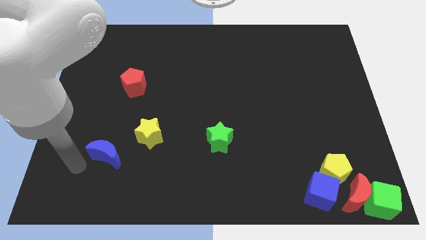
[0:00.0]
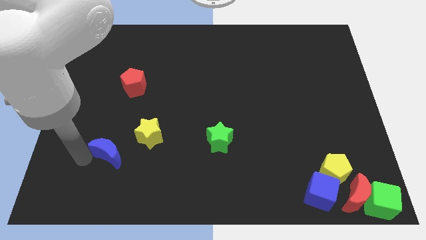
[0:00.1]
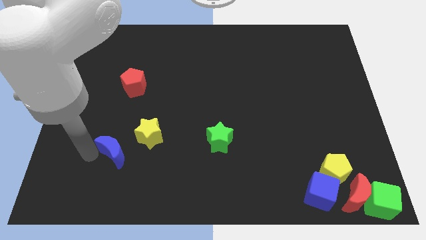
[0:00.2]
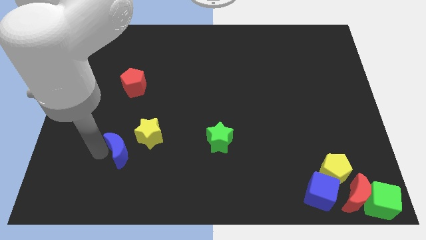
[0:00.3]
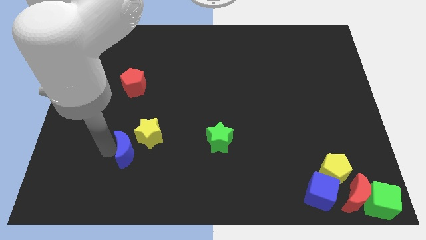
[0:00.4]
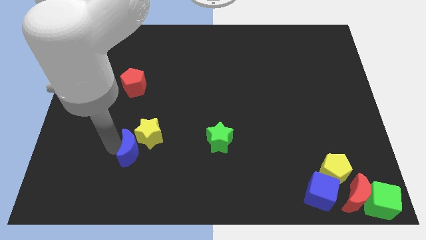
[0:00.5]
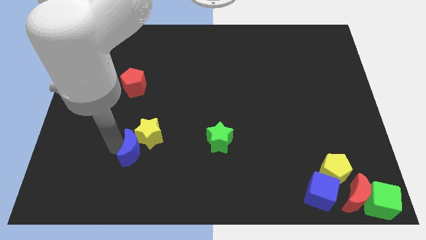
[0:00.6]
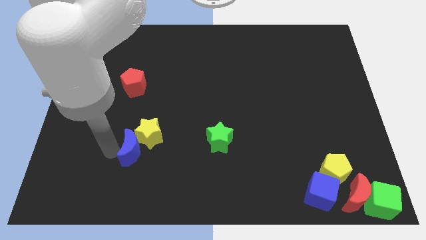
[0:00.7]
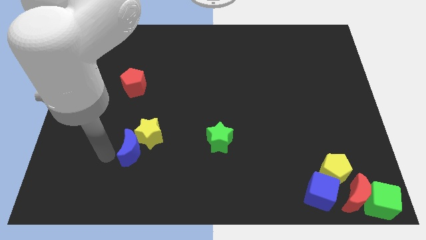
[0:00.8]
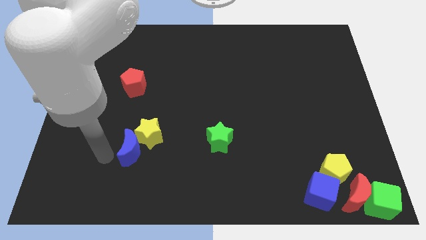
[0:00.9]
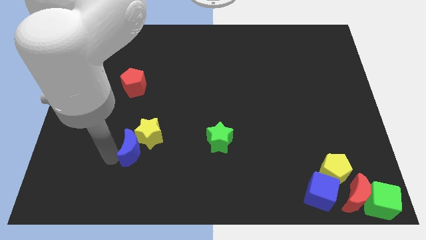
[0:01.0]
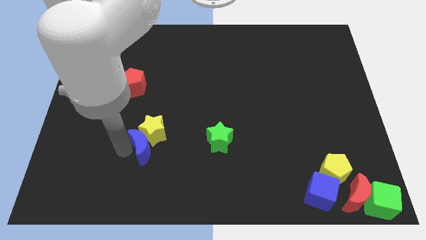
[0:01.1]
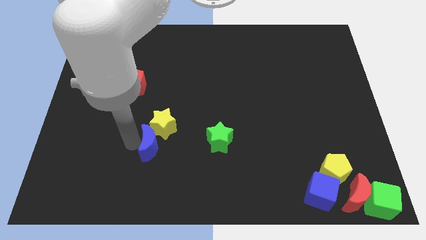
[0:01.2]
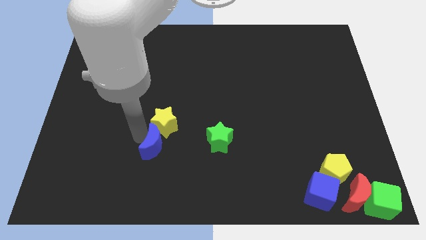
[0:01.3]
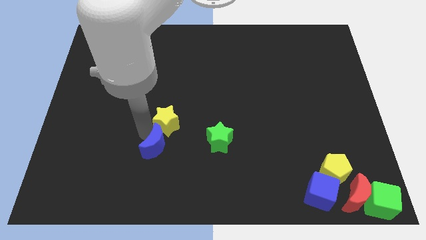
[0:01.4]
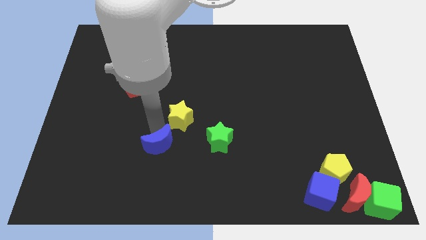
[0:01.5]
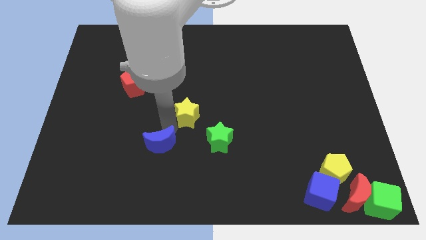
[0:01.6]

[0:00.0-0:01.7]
push the blue moon into the yellow star

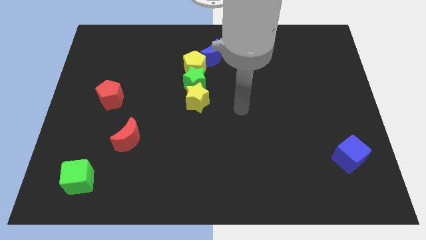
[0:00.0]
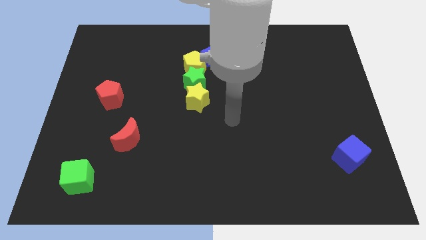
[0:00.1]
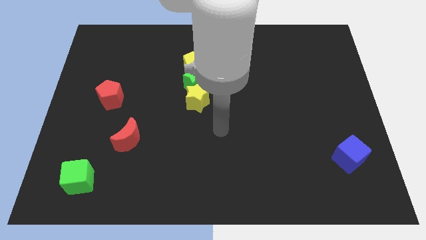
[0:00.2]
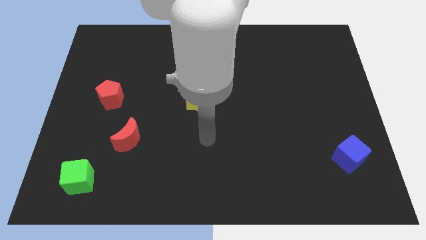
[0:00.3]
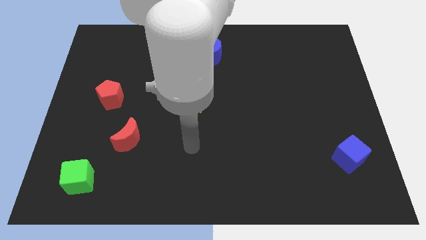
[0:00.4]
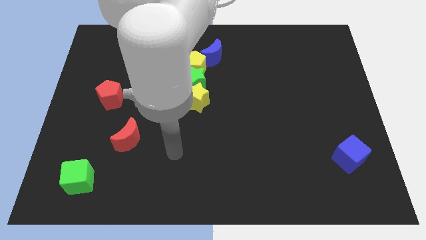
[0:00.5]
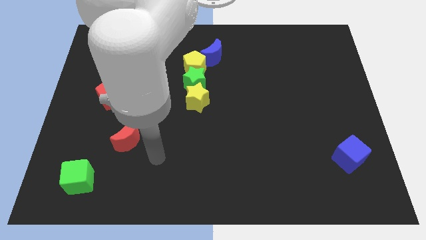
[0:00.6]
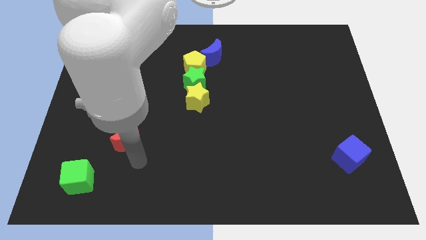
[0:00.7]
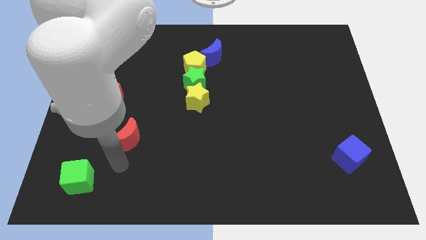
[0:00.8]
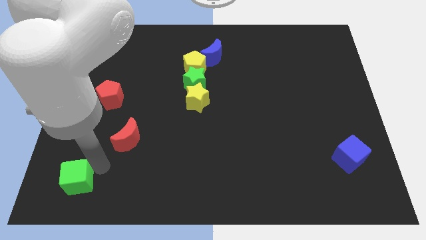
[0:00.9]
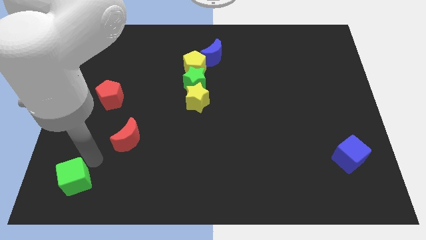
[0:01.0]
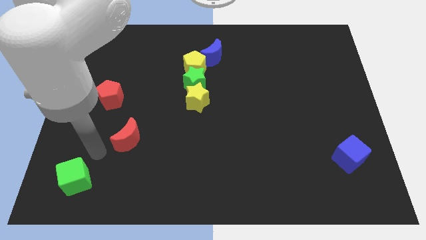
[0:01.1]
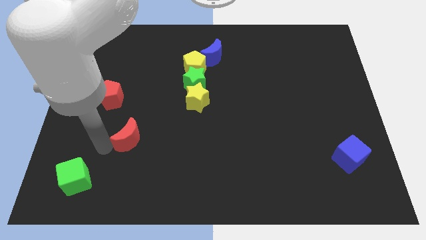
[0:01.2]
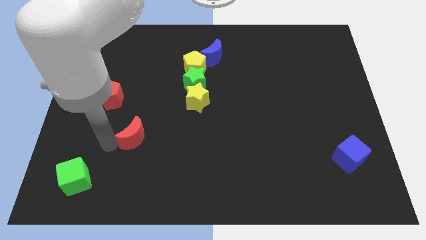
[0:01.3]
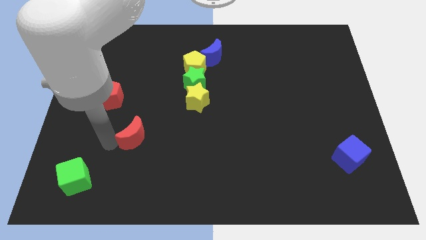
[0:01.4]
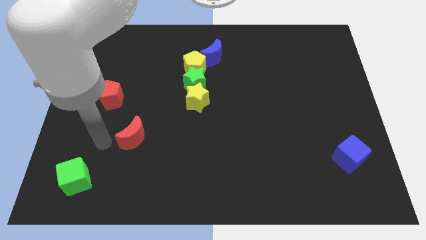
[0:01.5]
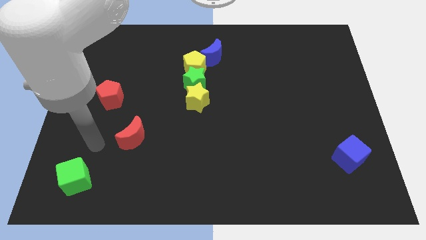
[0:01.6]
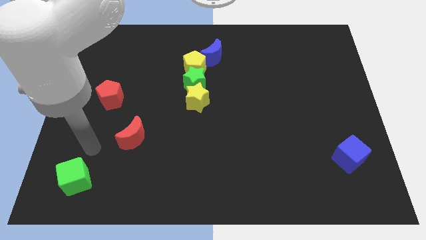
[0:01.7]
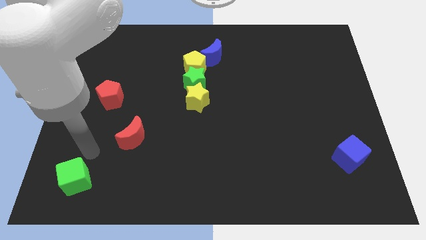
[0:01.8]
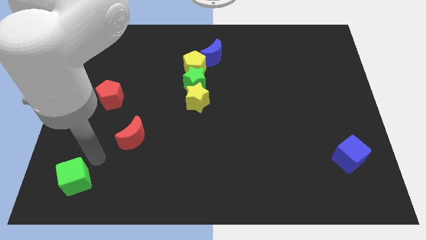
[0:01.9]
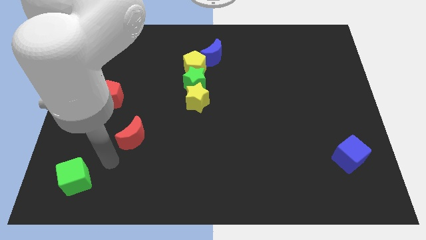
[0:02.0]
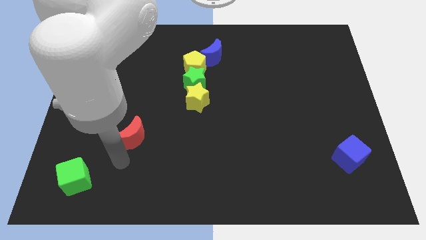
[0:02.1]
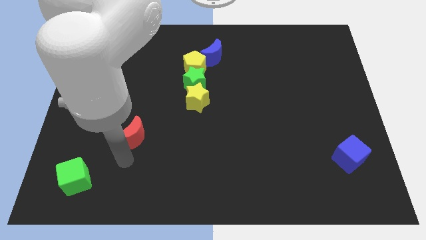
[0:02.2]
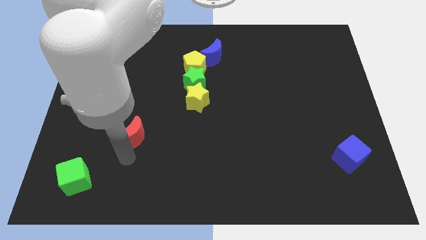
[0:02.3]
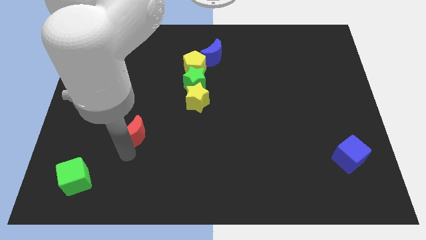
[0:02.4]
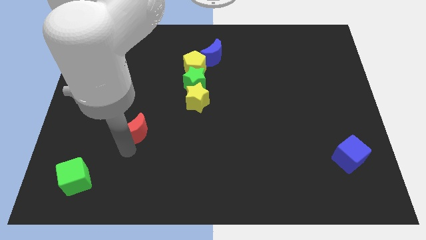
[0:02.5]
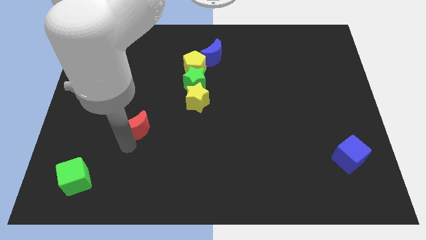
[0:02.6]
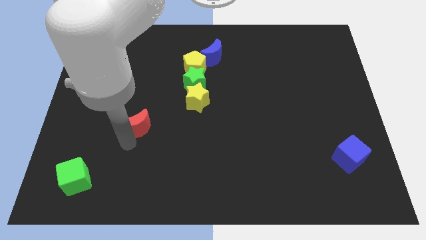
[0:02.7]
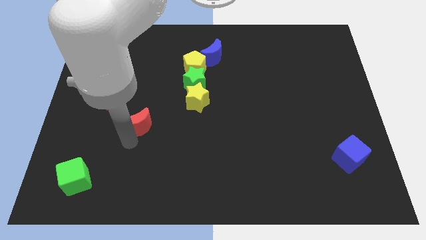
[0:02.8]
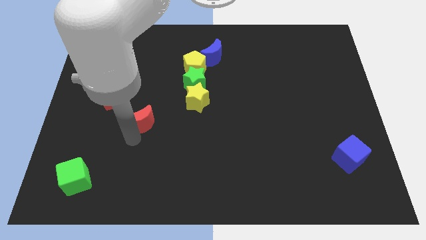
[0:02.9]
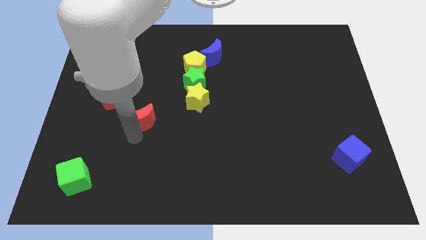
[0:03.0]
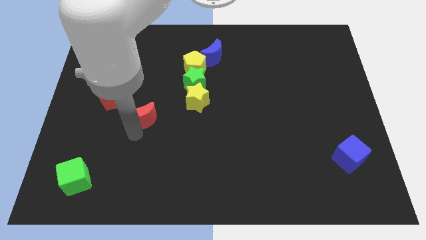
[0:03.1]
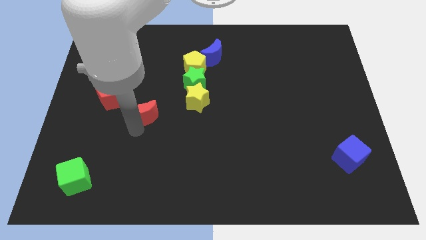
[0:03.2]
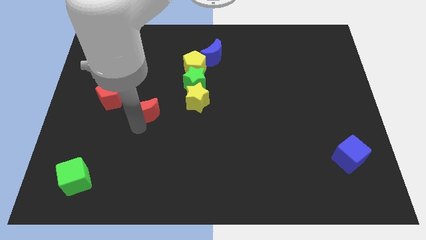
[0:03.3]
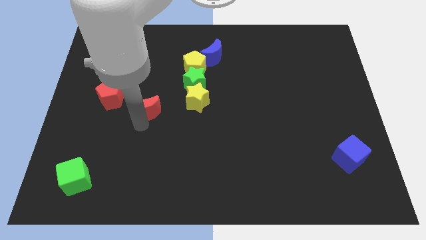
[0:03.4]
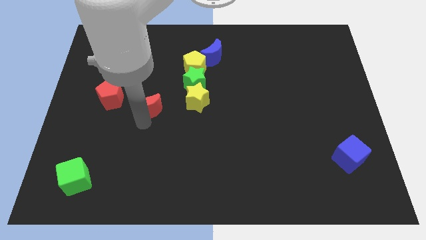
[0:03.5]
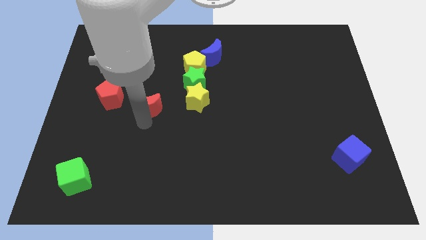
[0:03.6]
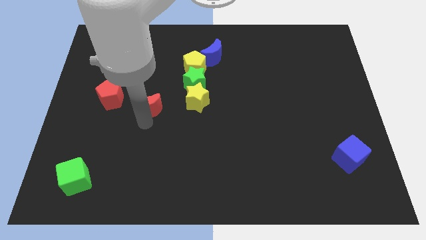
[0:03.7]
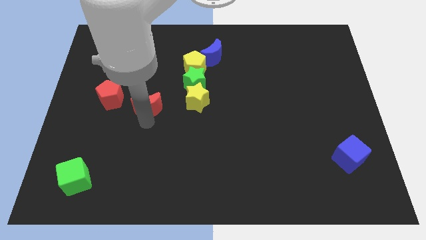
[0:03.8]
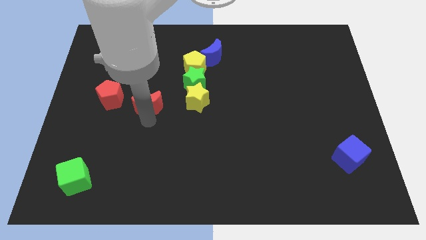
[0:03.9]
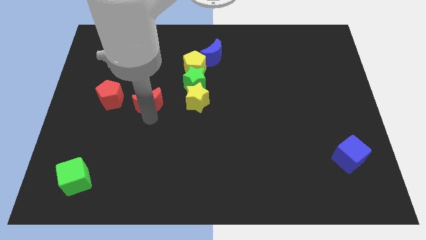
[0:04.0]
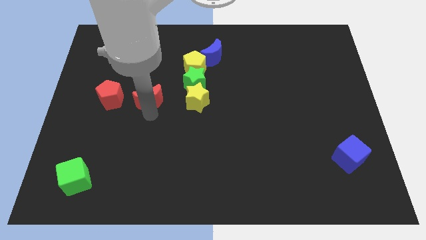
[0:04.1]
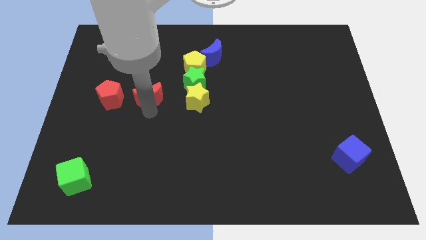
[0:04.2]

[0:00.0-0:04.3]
push red crescent upwards of the board

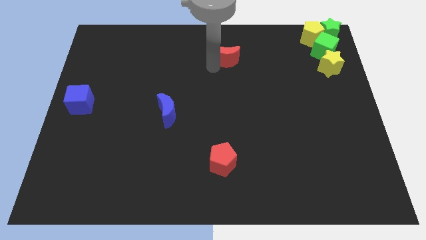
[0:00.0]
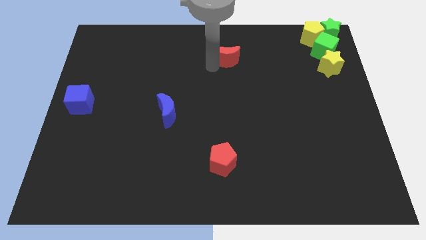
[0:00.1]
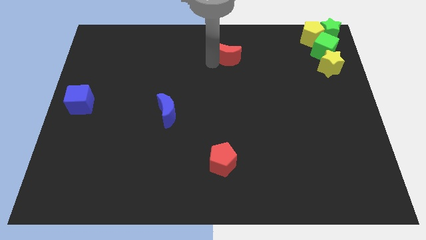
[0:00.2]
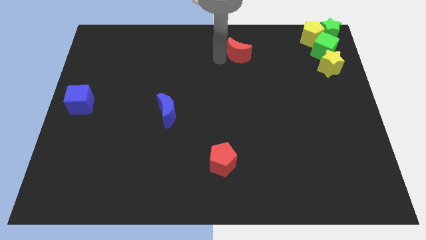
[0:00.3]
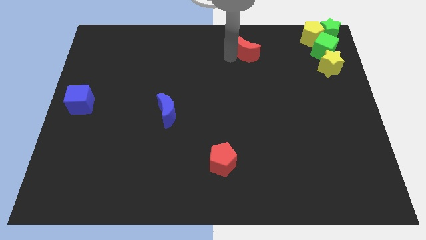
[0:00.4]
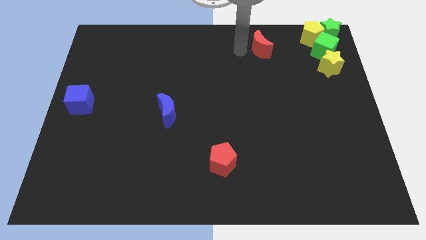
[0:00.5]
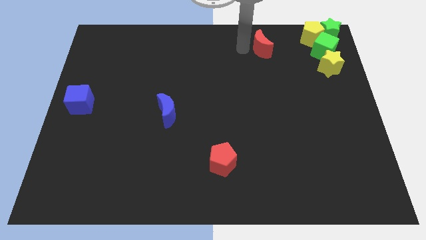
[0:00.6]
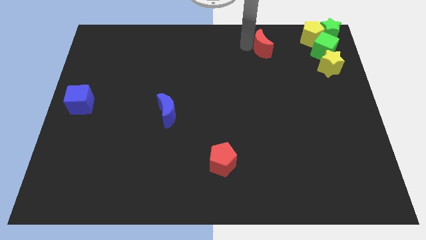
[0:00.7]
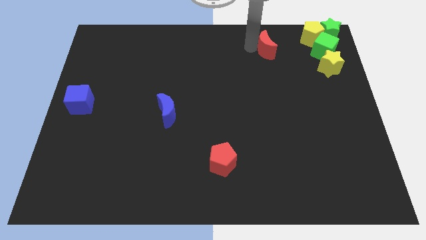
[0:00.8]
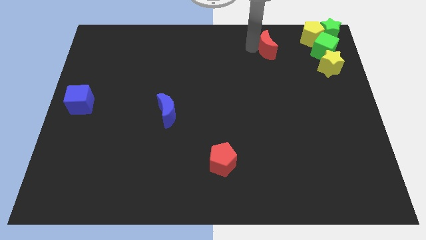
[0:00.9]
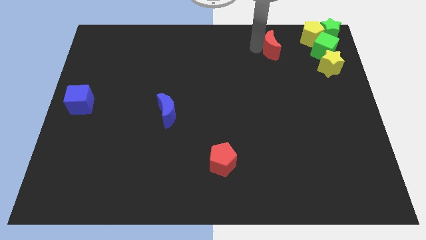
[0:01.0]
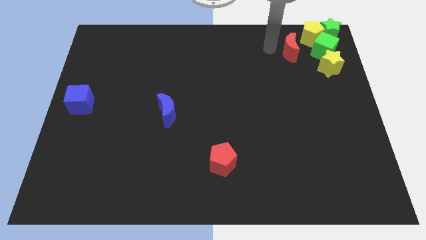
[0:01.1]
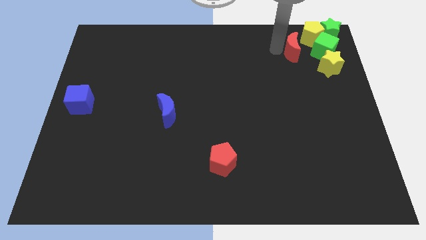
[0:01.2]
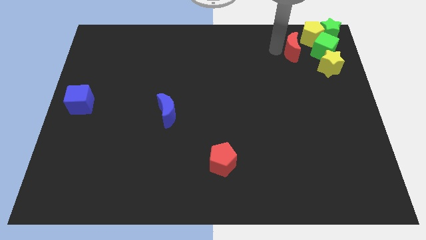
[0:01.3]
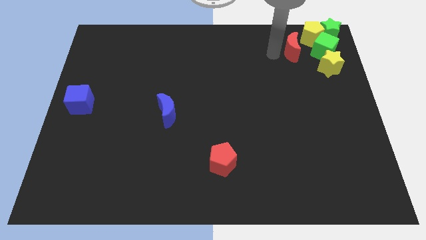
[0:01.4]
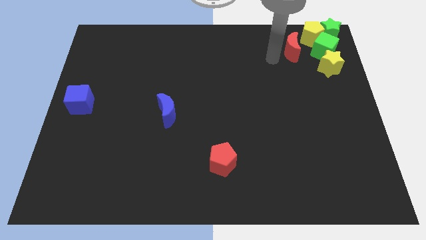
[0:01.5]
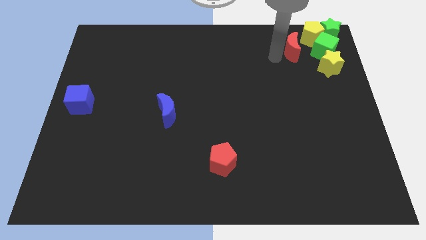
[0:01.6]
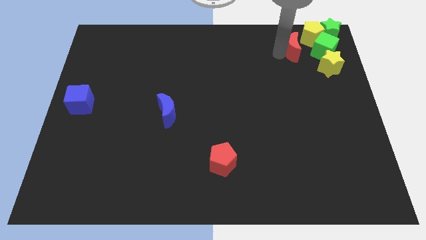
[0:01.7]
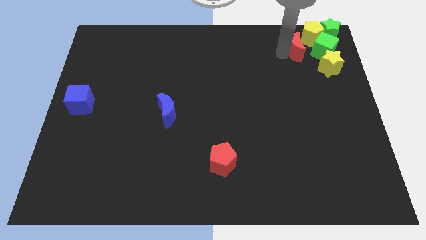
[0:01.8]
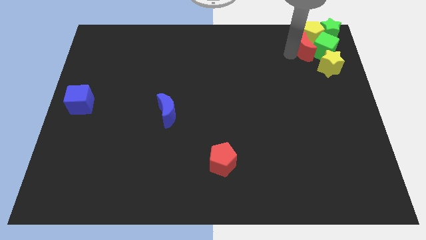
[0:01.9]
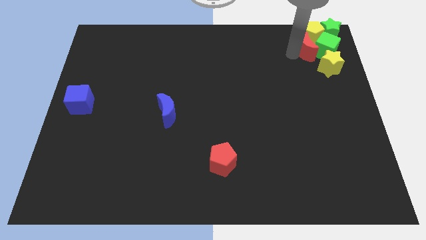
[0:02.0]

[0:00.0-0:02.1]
slide the red moon into the green cube

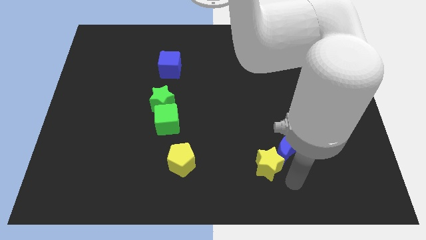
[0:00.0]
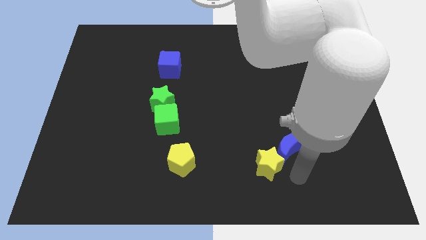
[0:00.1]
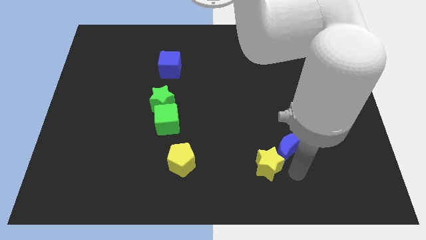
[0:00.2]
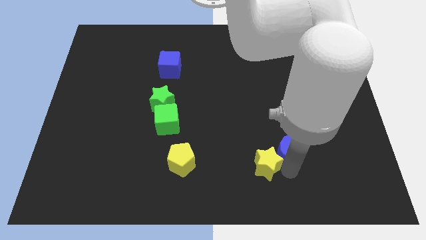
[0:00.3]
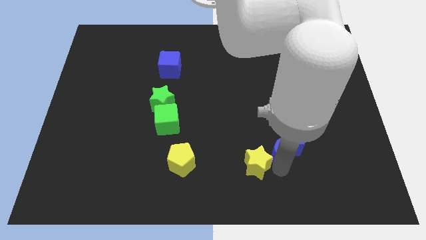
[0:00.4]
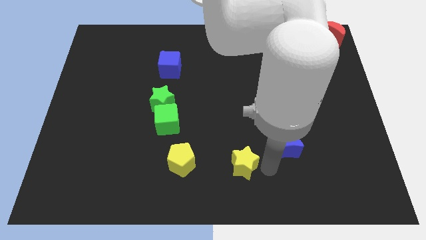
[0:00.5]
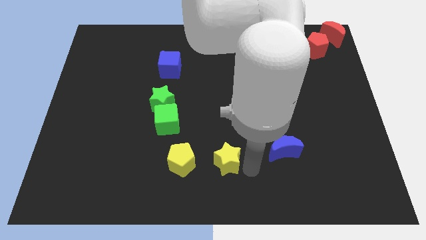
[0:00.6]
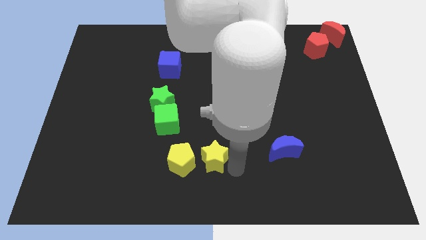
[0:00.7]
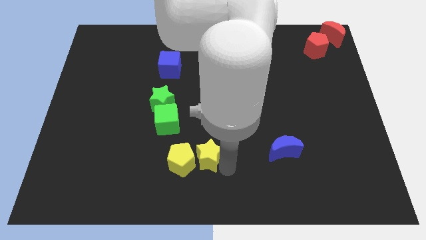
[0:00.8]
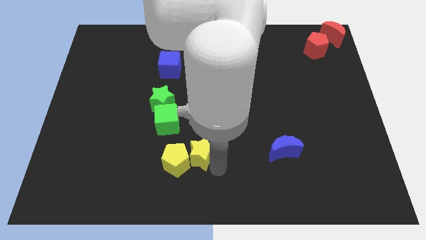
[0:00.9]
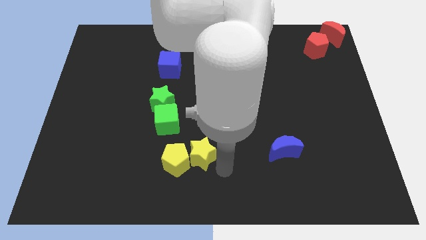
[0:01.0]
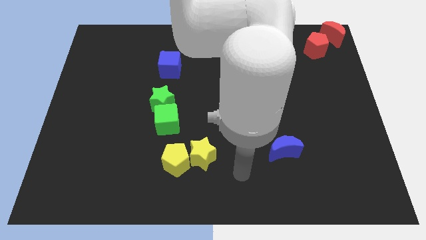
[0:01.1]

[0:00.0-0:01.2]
push the yellow star to the right of the yellow pentagon
